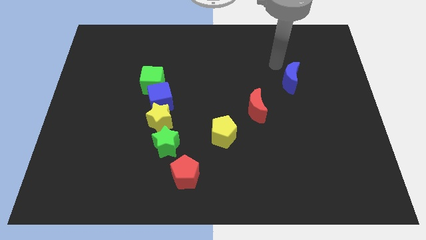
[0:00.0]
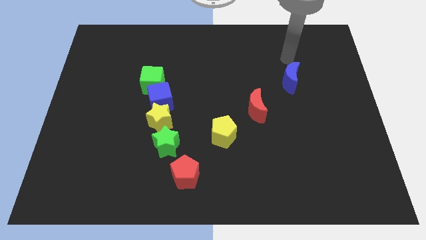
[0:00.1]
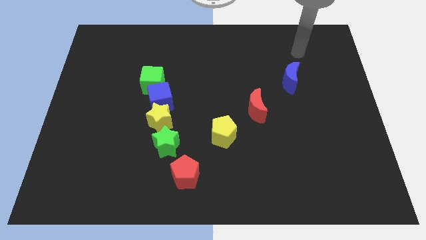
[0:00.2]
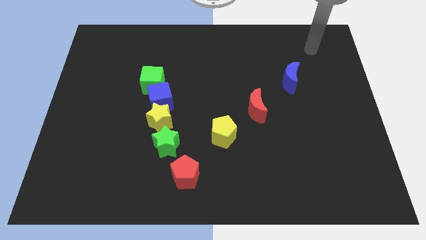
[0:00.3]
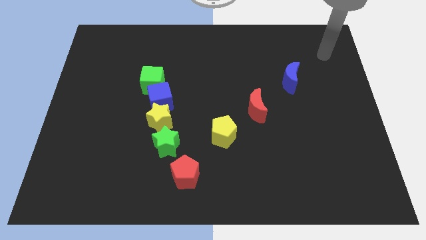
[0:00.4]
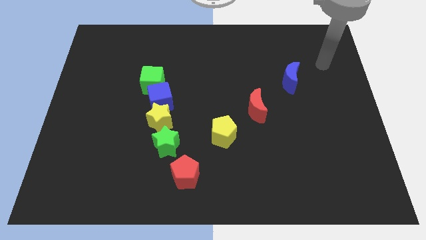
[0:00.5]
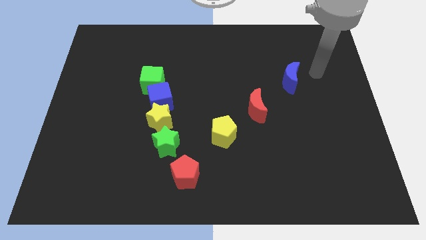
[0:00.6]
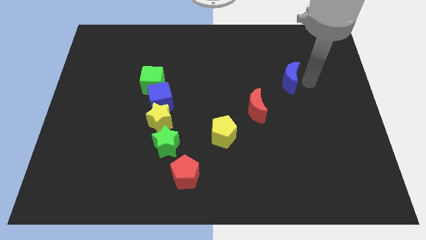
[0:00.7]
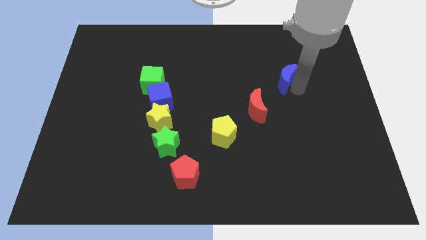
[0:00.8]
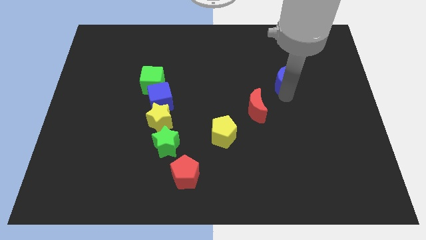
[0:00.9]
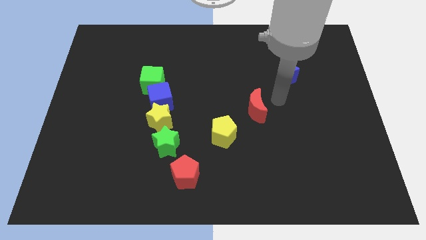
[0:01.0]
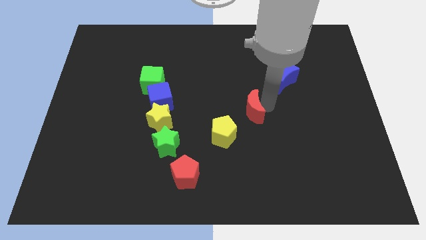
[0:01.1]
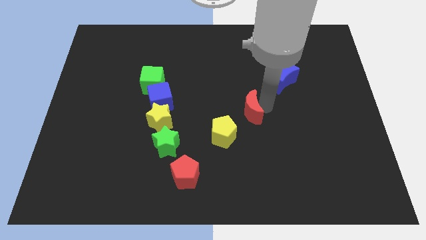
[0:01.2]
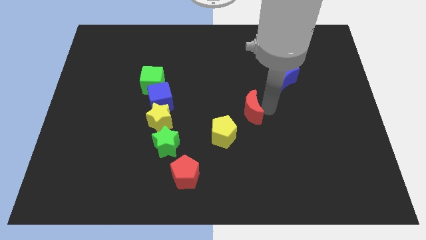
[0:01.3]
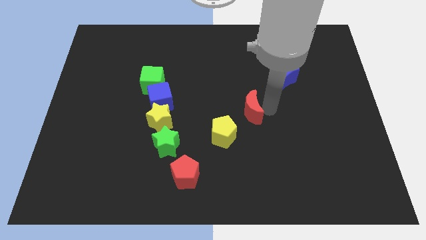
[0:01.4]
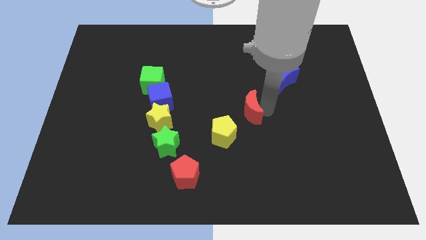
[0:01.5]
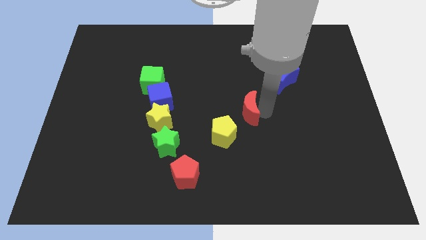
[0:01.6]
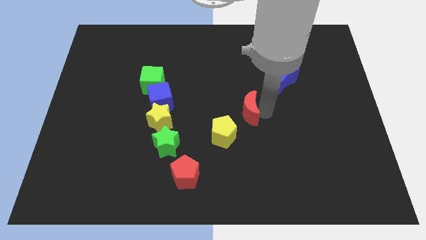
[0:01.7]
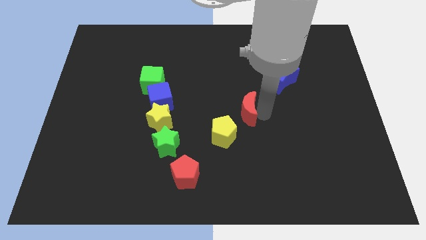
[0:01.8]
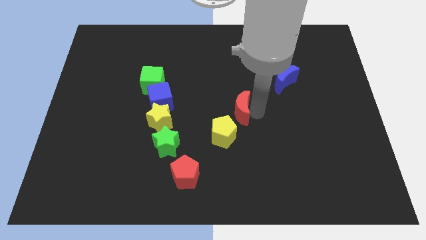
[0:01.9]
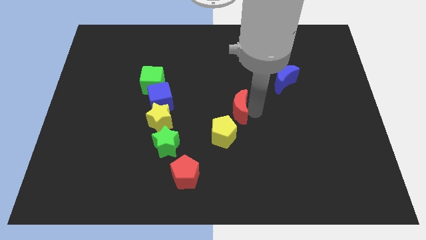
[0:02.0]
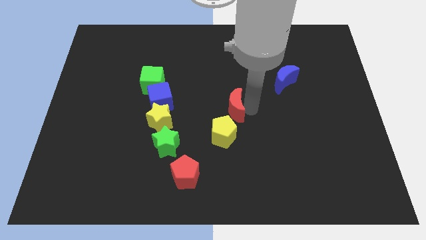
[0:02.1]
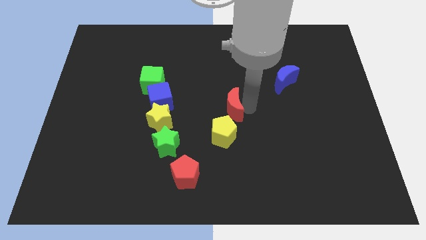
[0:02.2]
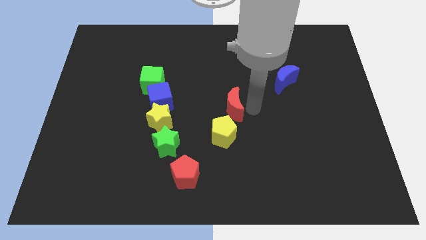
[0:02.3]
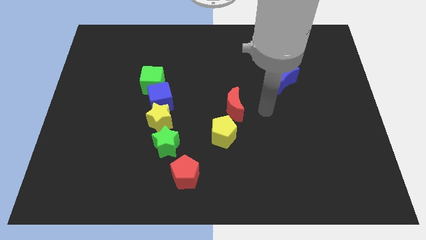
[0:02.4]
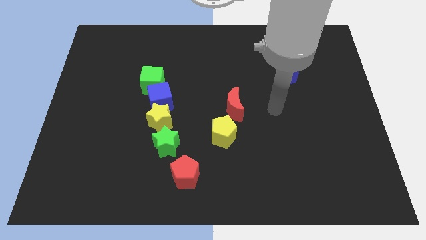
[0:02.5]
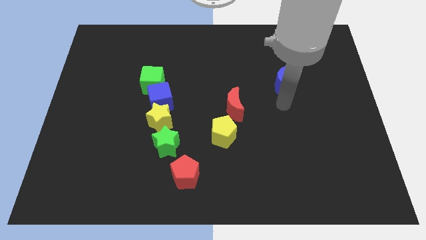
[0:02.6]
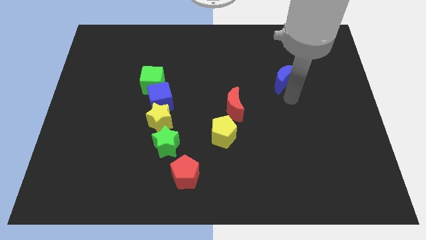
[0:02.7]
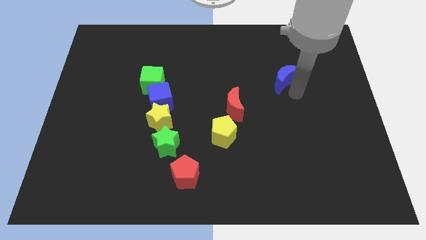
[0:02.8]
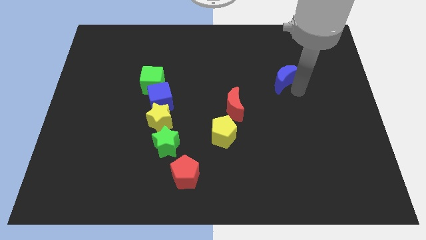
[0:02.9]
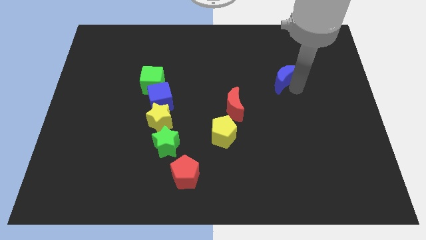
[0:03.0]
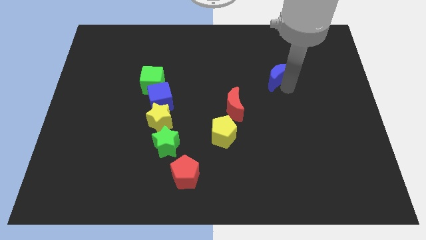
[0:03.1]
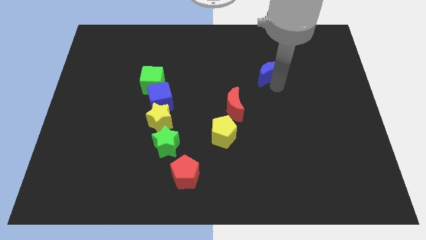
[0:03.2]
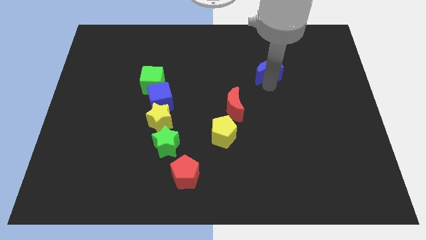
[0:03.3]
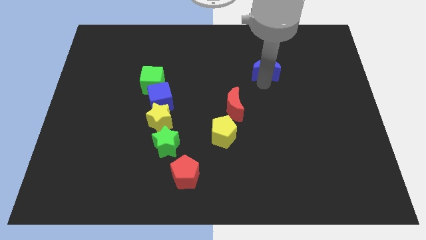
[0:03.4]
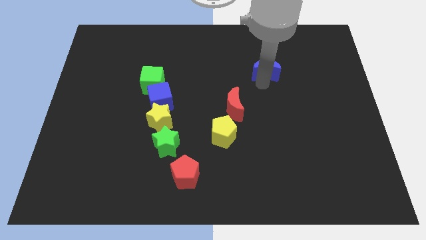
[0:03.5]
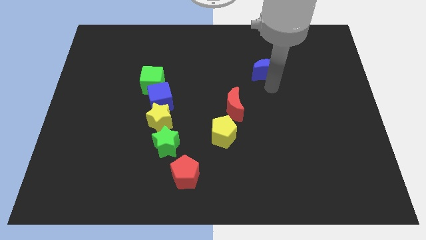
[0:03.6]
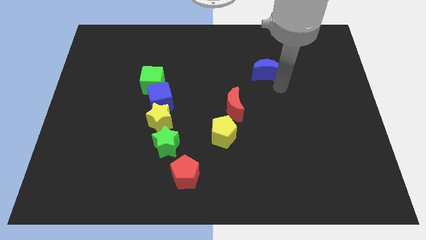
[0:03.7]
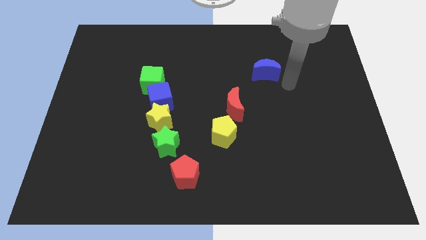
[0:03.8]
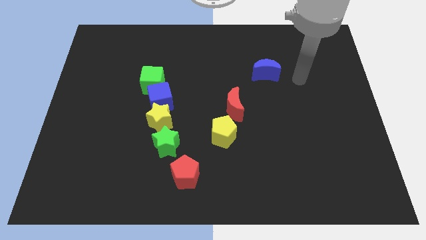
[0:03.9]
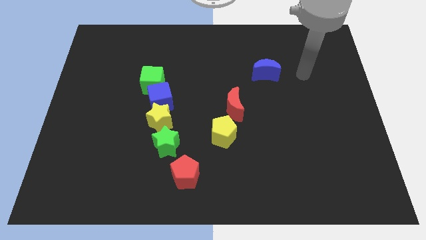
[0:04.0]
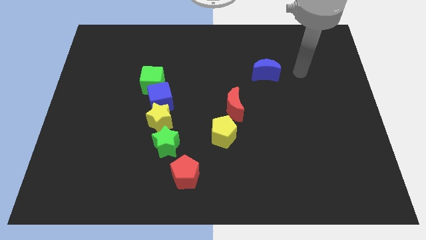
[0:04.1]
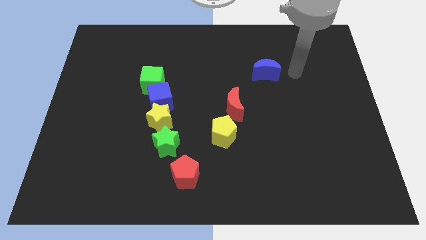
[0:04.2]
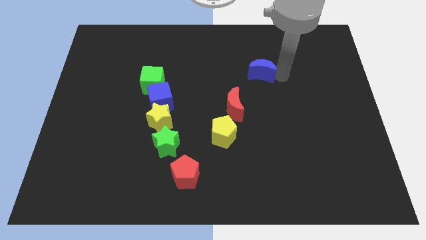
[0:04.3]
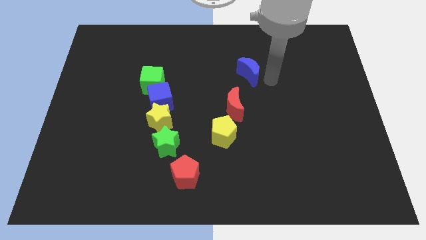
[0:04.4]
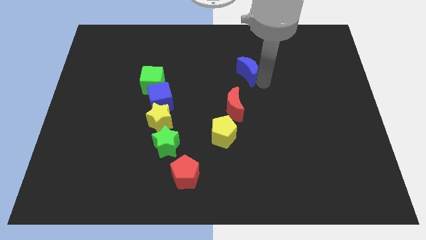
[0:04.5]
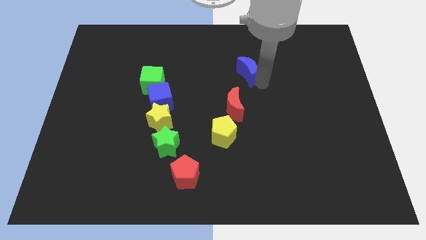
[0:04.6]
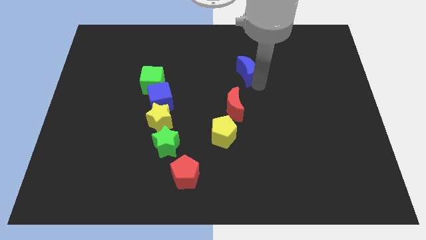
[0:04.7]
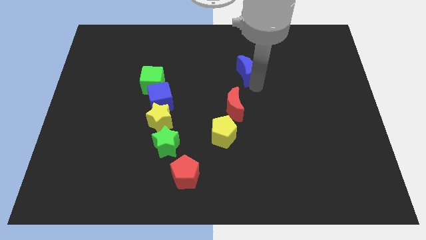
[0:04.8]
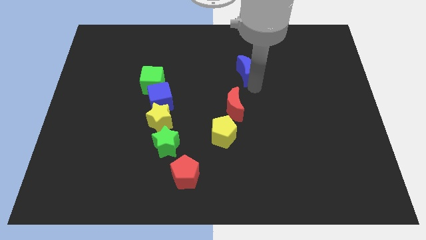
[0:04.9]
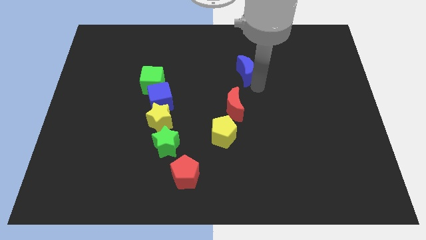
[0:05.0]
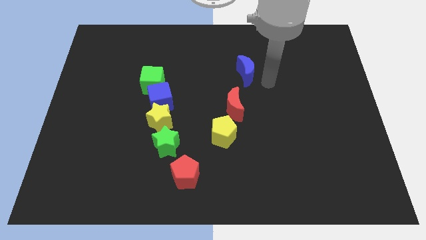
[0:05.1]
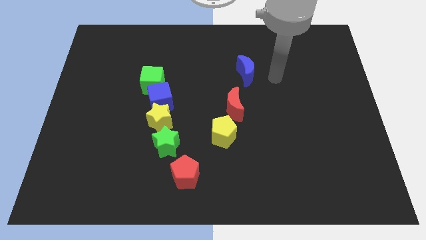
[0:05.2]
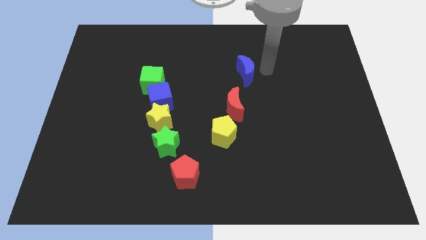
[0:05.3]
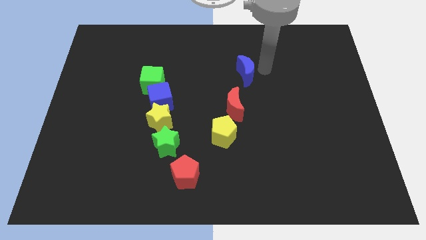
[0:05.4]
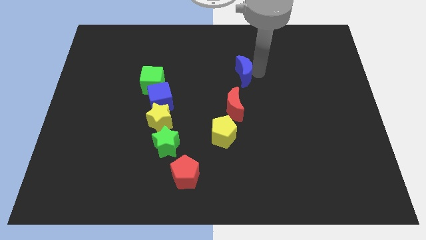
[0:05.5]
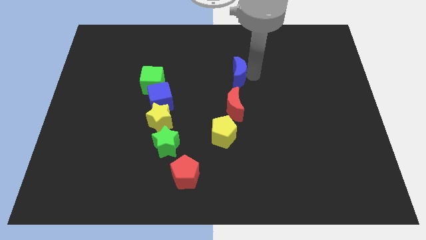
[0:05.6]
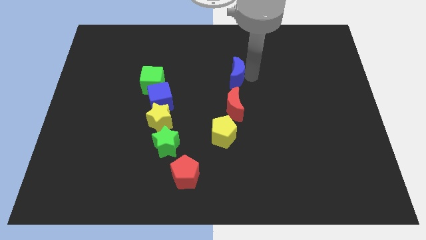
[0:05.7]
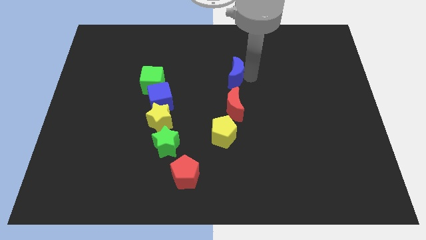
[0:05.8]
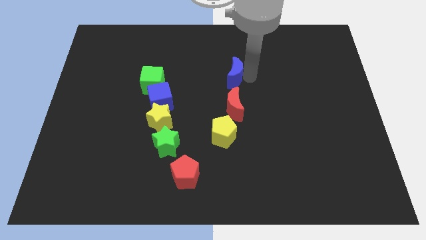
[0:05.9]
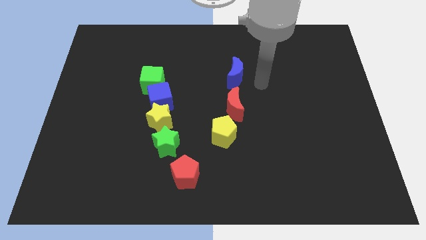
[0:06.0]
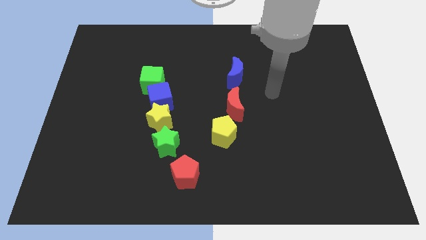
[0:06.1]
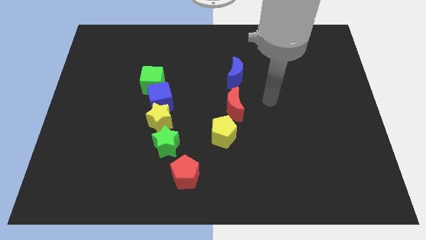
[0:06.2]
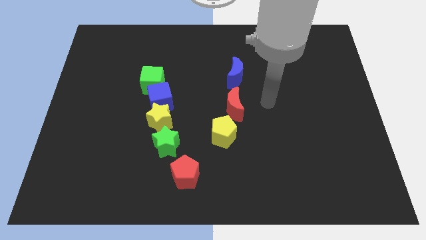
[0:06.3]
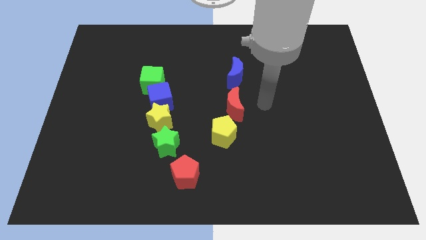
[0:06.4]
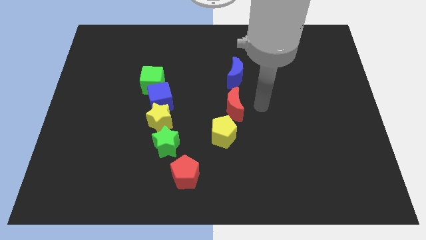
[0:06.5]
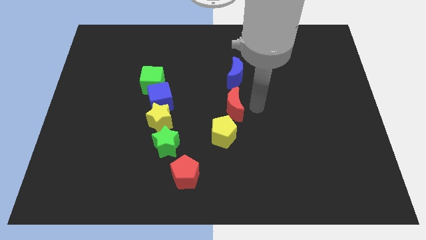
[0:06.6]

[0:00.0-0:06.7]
adjust red and blue moons to make a vertical line

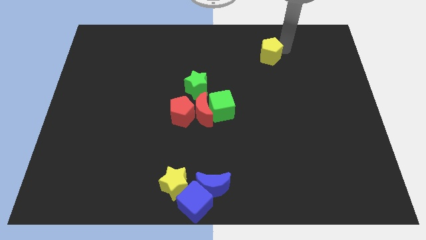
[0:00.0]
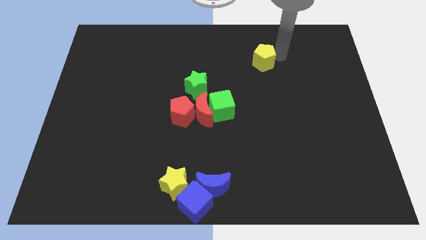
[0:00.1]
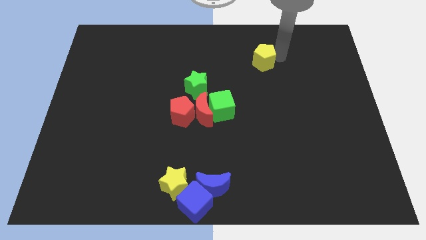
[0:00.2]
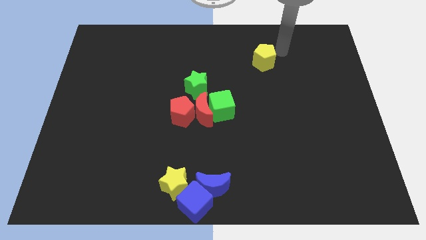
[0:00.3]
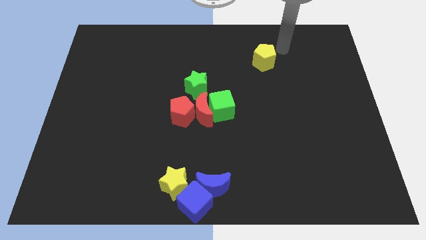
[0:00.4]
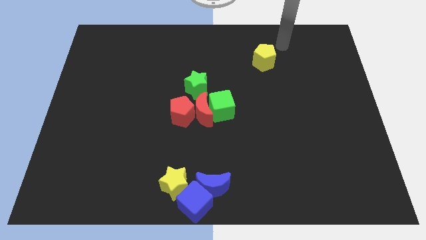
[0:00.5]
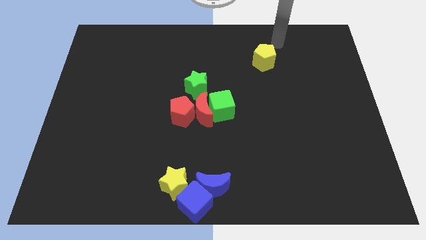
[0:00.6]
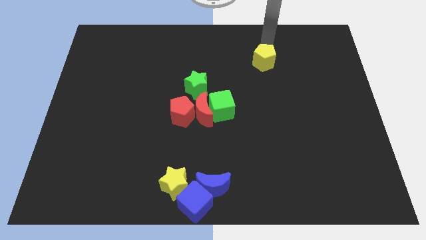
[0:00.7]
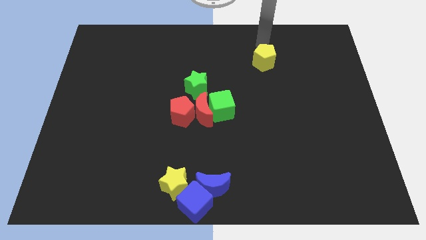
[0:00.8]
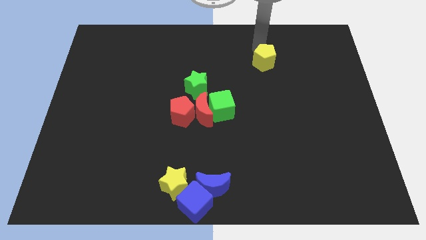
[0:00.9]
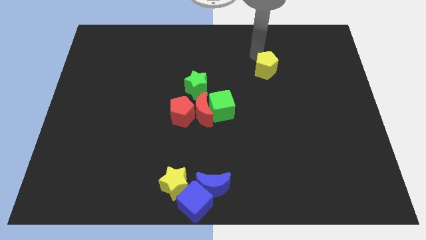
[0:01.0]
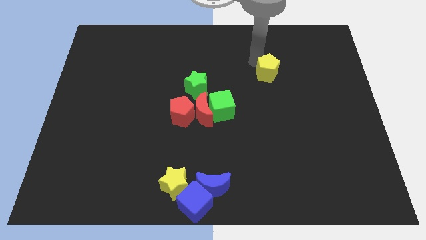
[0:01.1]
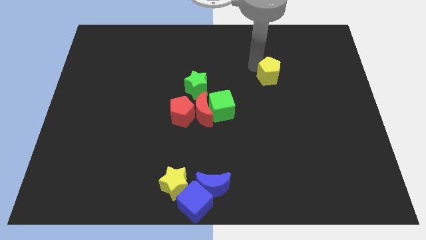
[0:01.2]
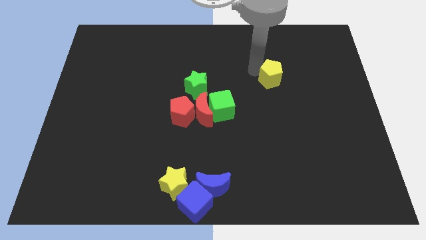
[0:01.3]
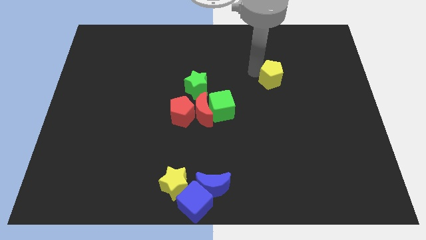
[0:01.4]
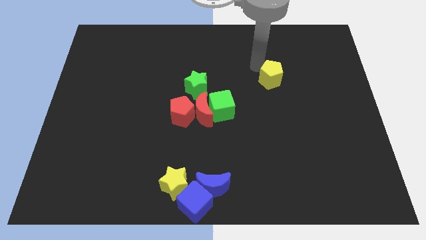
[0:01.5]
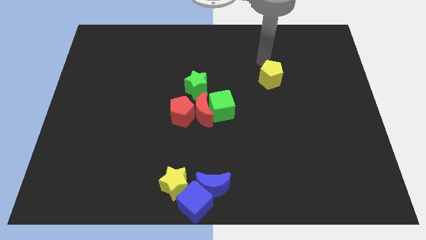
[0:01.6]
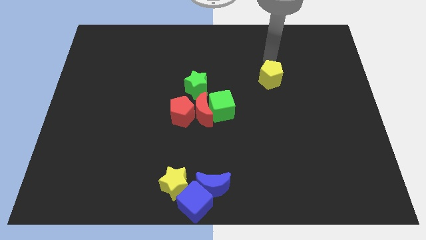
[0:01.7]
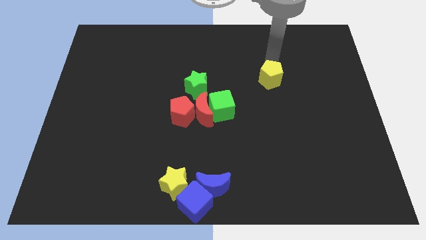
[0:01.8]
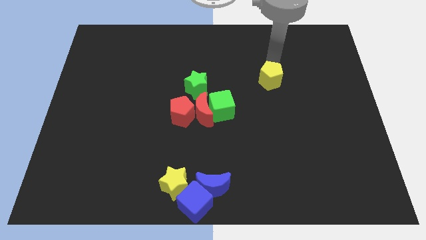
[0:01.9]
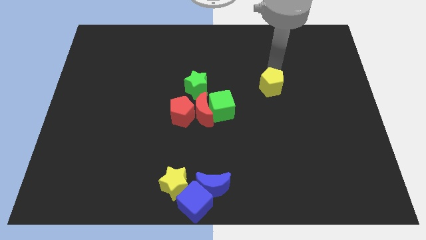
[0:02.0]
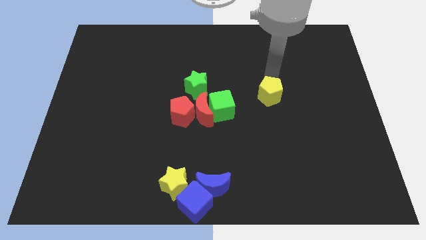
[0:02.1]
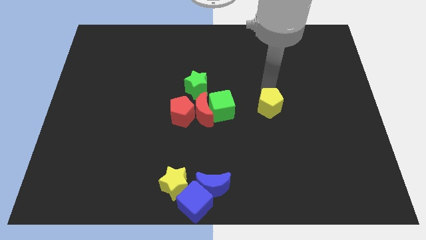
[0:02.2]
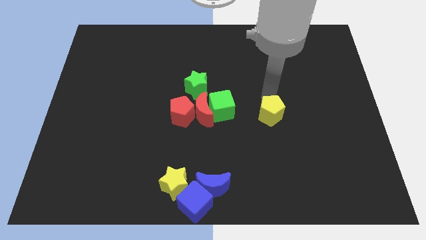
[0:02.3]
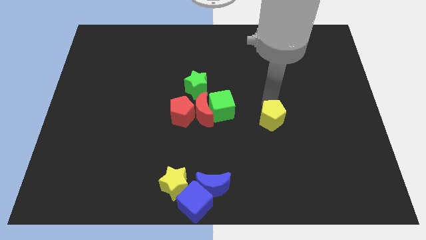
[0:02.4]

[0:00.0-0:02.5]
push the yellow pentagon to the right of the green cube
